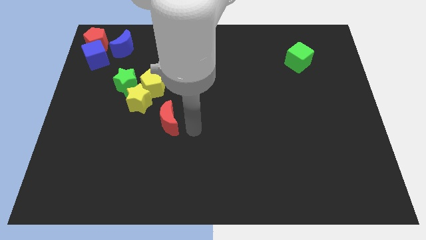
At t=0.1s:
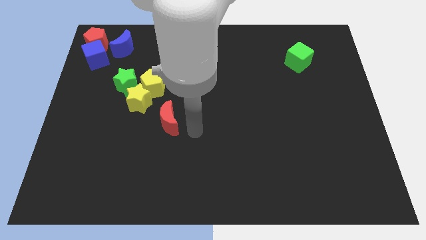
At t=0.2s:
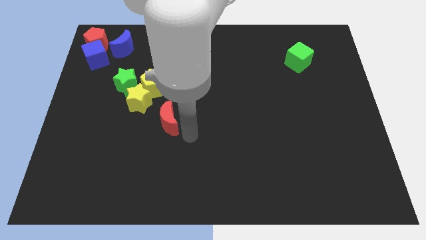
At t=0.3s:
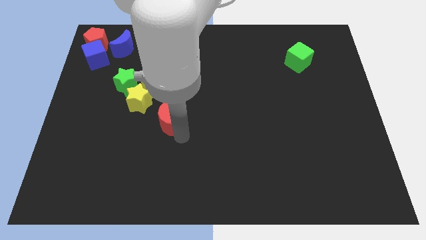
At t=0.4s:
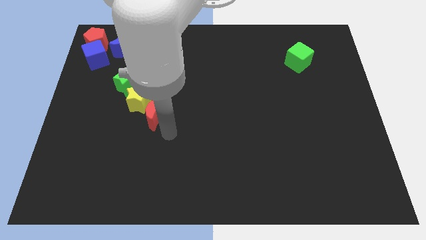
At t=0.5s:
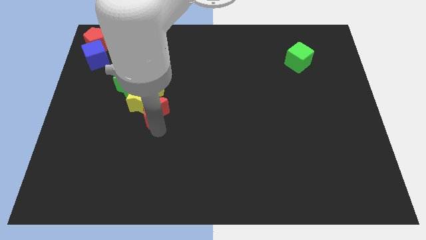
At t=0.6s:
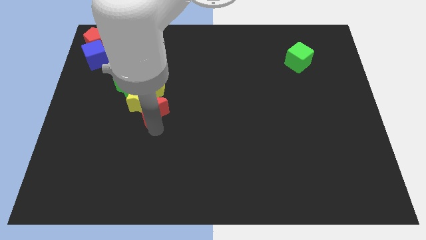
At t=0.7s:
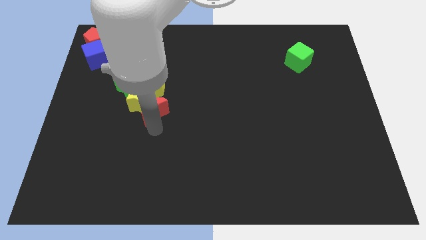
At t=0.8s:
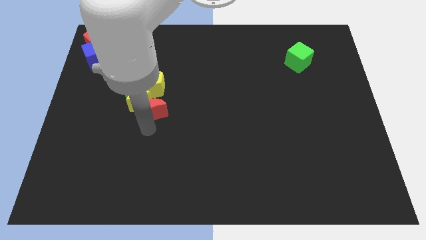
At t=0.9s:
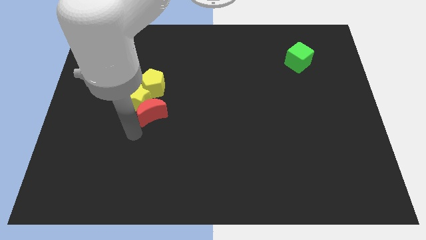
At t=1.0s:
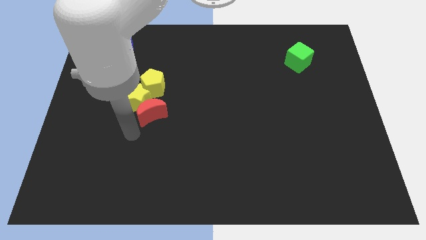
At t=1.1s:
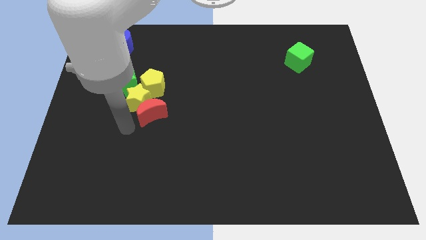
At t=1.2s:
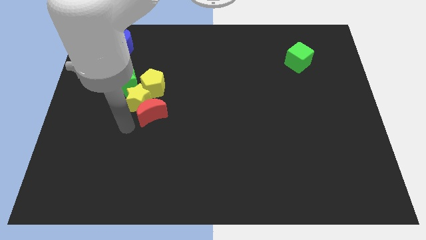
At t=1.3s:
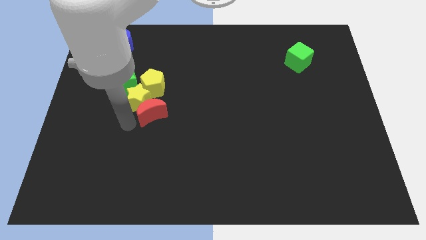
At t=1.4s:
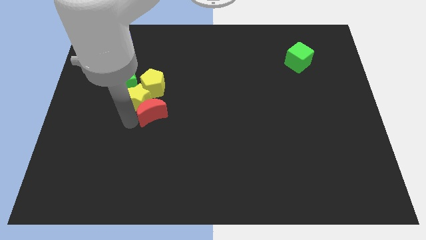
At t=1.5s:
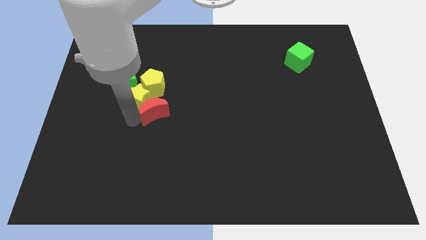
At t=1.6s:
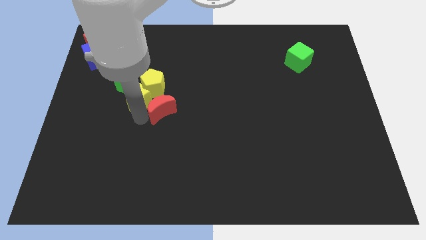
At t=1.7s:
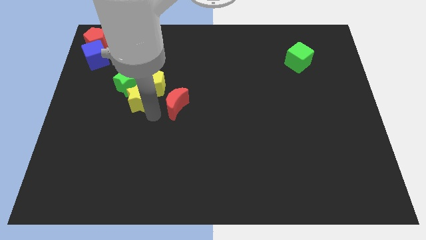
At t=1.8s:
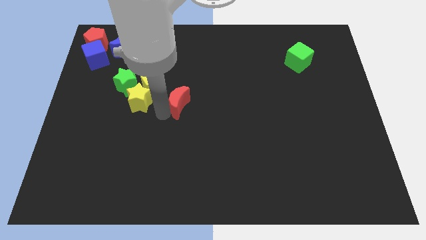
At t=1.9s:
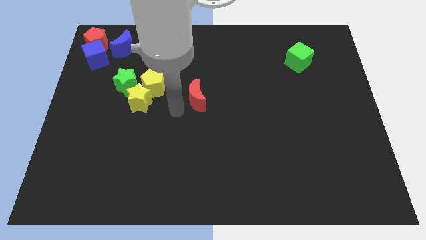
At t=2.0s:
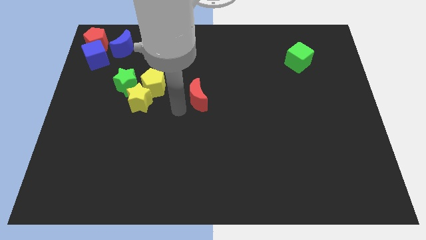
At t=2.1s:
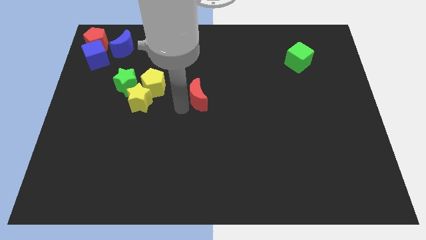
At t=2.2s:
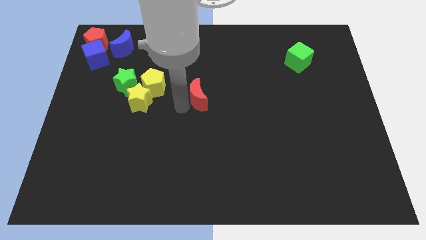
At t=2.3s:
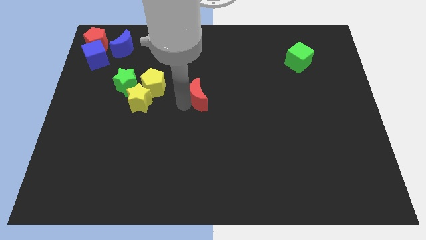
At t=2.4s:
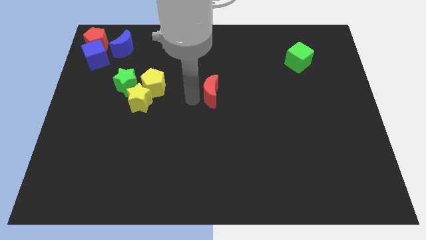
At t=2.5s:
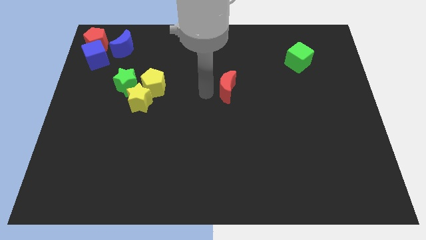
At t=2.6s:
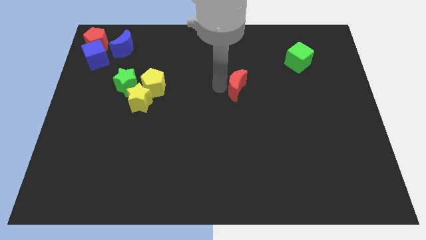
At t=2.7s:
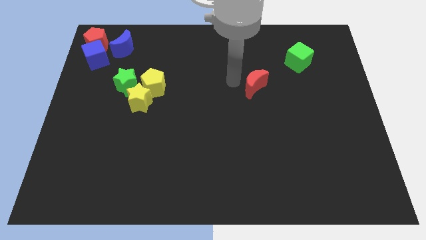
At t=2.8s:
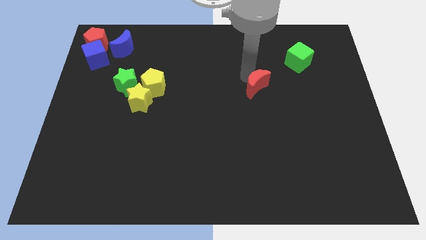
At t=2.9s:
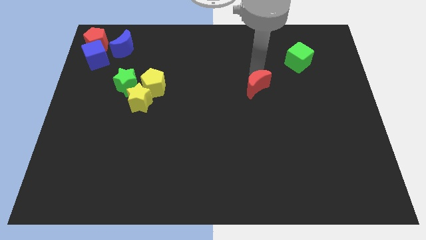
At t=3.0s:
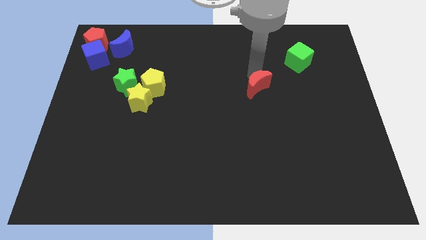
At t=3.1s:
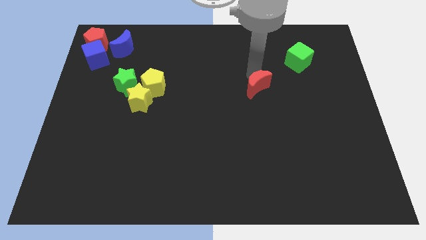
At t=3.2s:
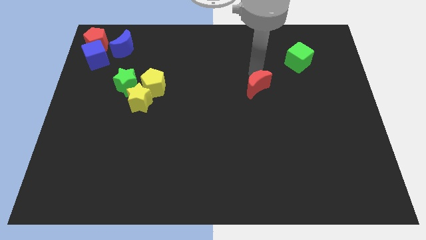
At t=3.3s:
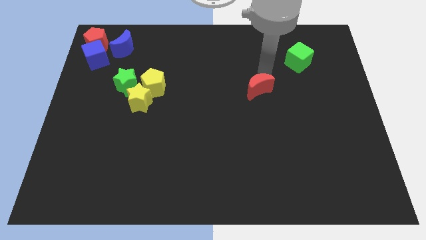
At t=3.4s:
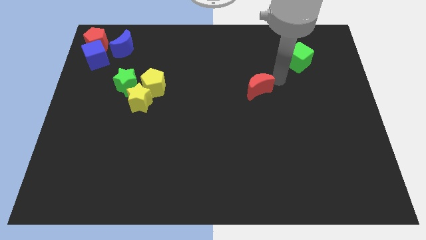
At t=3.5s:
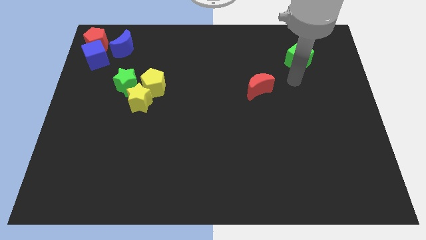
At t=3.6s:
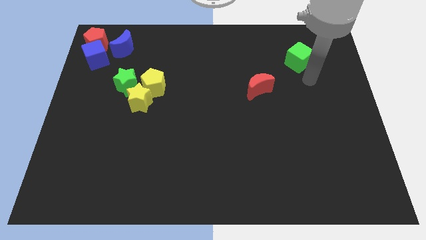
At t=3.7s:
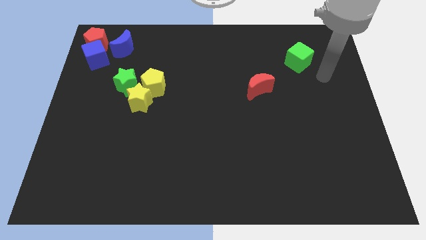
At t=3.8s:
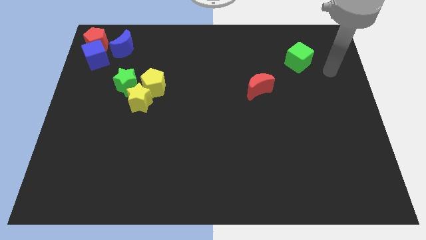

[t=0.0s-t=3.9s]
push the red moon to the bottom left diagonal of the green cube

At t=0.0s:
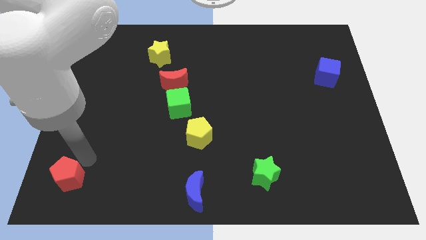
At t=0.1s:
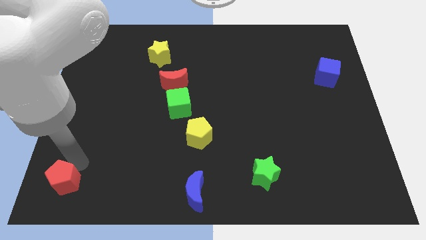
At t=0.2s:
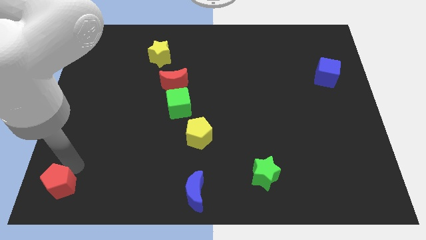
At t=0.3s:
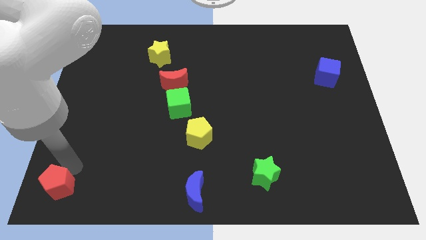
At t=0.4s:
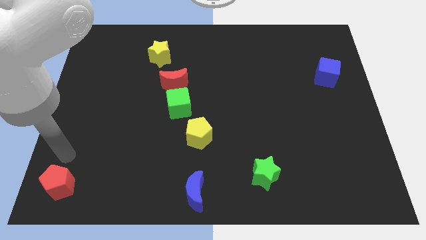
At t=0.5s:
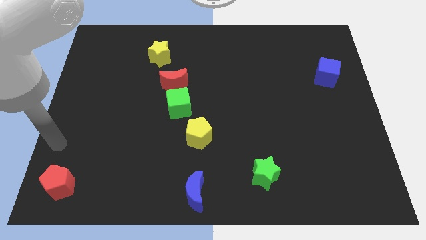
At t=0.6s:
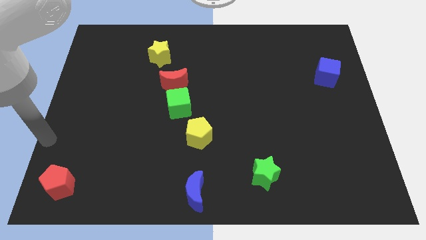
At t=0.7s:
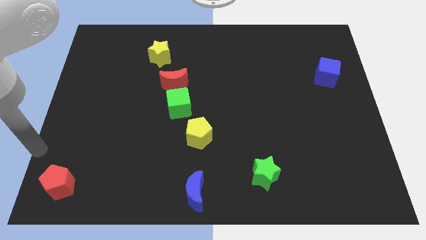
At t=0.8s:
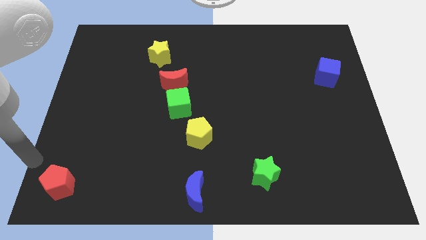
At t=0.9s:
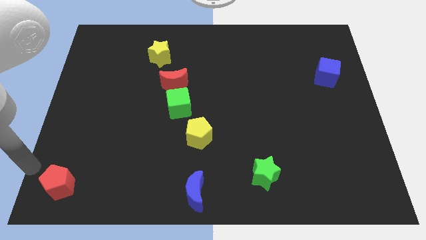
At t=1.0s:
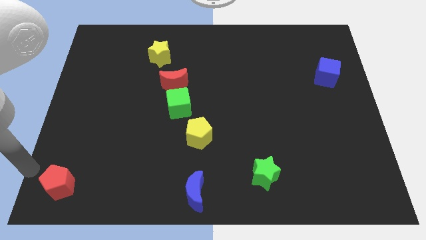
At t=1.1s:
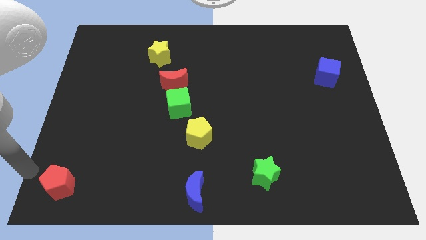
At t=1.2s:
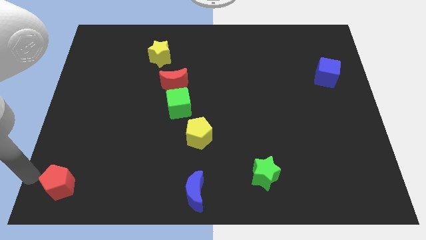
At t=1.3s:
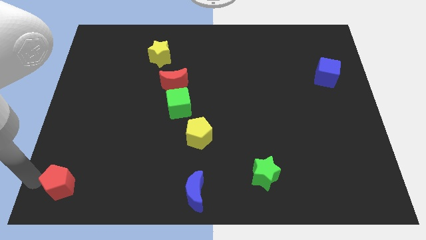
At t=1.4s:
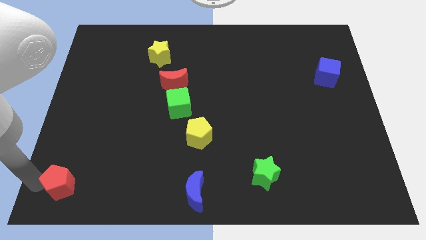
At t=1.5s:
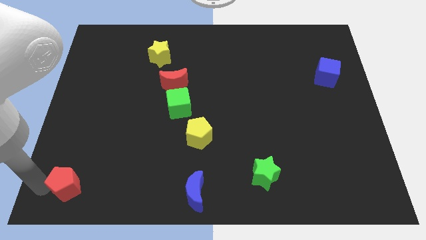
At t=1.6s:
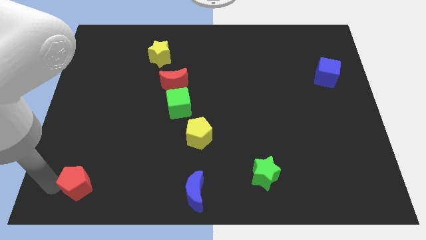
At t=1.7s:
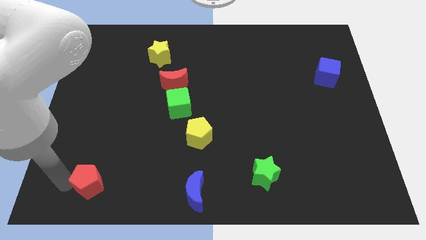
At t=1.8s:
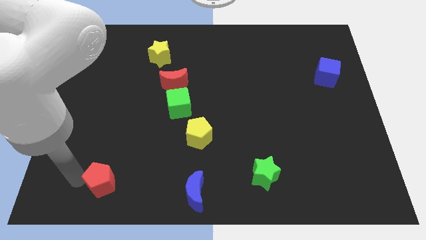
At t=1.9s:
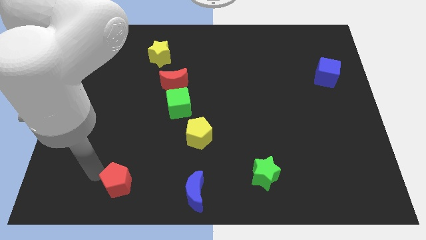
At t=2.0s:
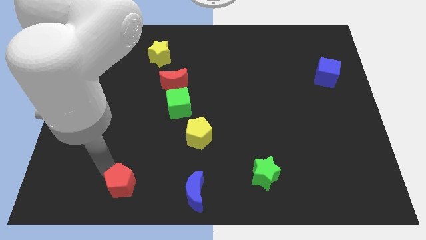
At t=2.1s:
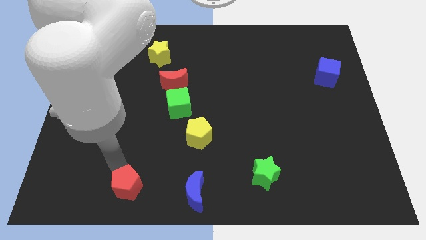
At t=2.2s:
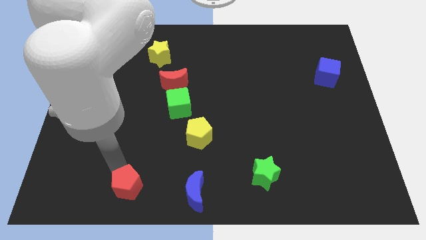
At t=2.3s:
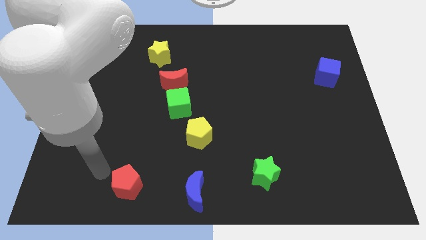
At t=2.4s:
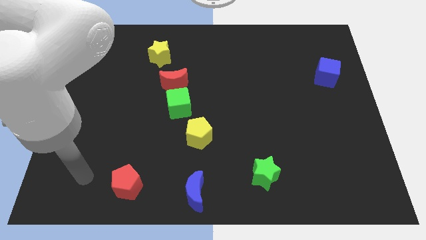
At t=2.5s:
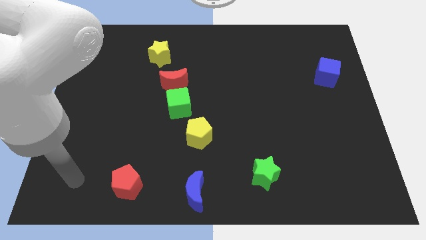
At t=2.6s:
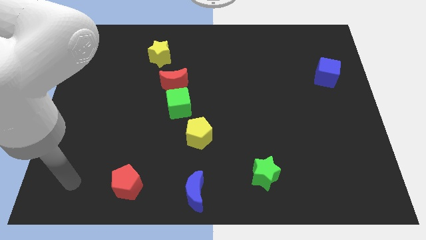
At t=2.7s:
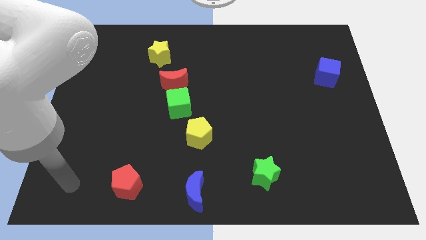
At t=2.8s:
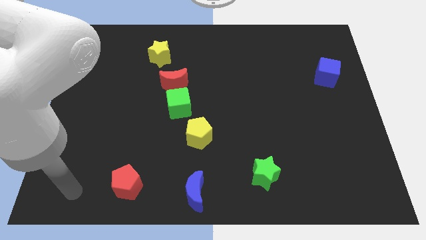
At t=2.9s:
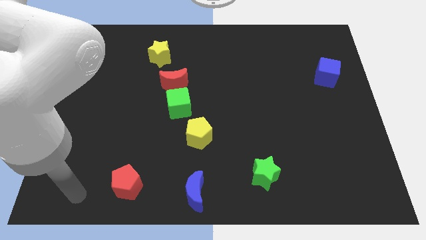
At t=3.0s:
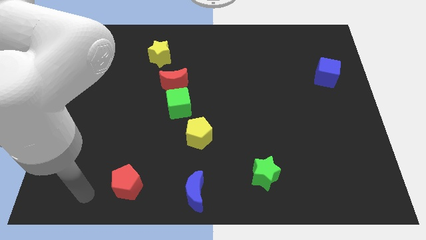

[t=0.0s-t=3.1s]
slide red pentagon parallel to blue moon

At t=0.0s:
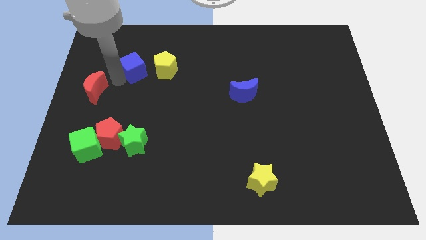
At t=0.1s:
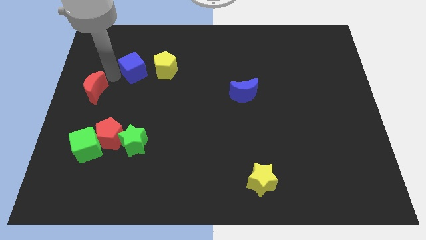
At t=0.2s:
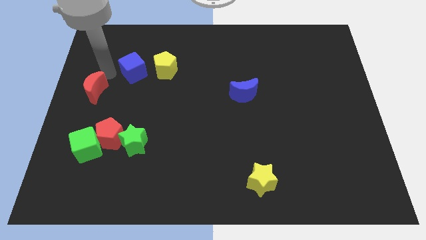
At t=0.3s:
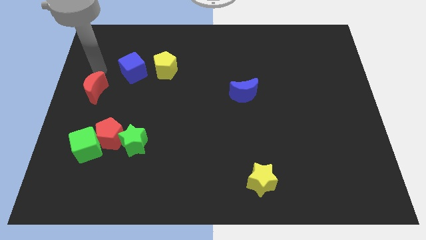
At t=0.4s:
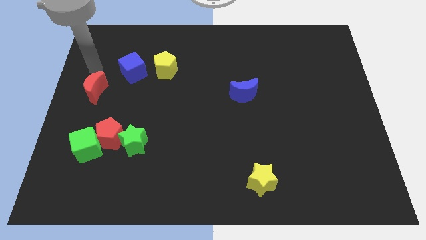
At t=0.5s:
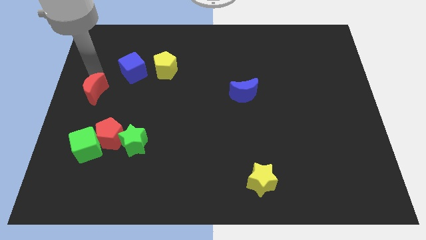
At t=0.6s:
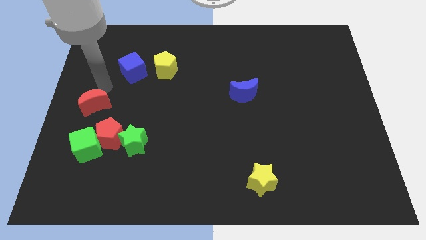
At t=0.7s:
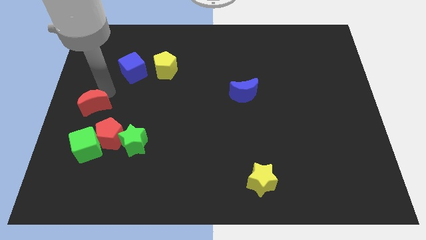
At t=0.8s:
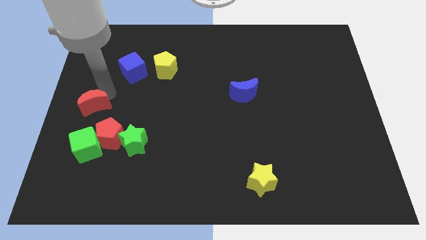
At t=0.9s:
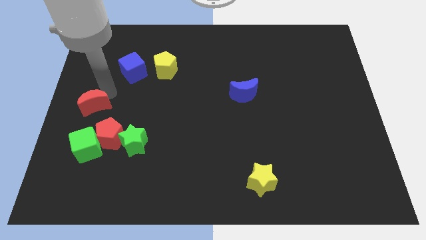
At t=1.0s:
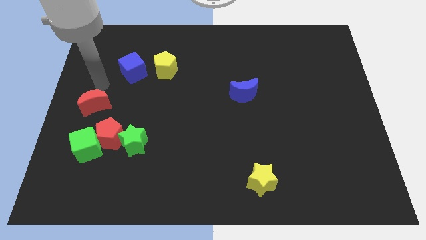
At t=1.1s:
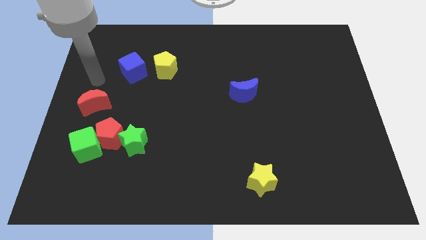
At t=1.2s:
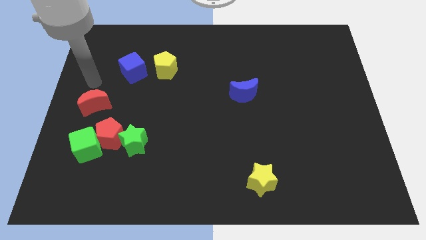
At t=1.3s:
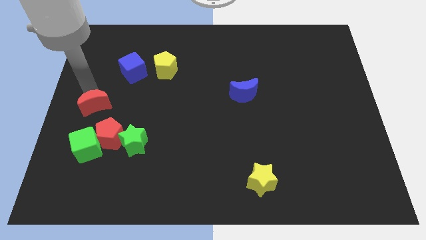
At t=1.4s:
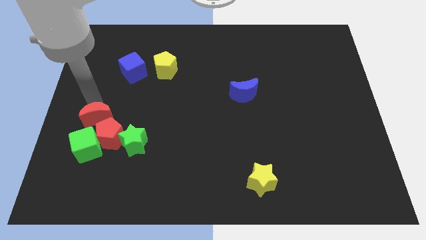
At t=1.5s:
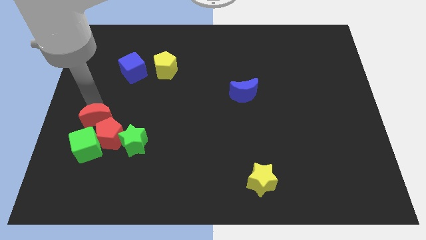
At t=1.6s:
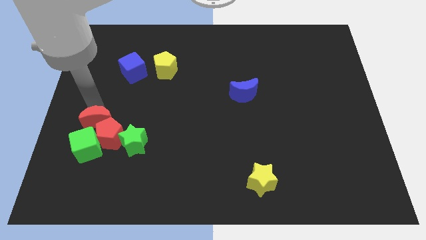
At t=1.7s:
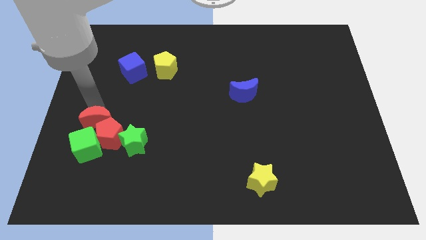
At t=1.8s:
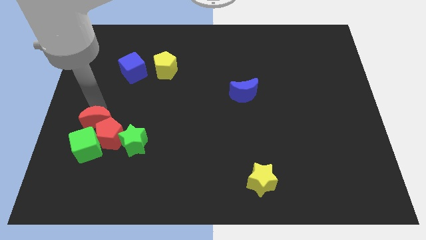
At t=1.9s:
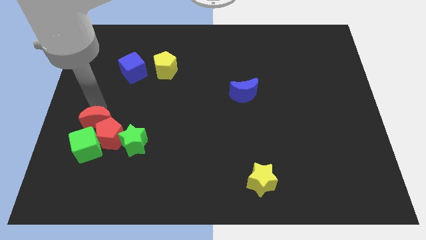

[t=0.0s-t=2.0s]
place the red moon to the top of red pentagon

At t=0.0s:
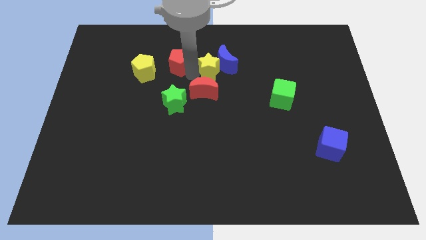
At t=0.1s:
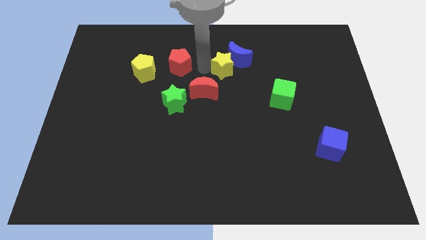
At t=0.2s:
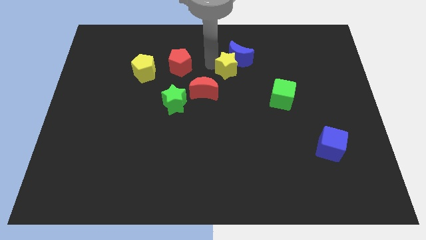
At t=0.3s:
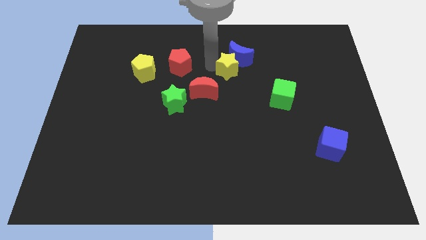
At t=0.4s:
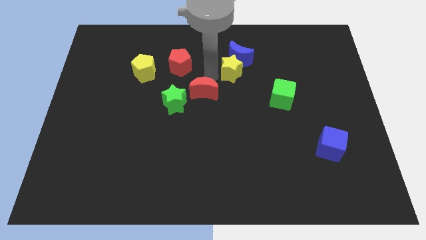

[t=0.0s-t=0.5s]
push the yellow star and blue moon to the upward right
